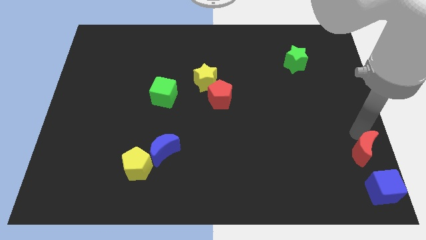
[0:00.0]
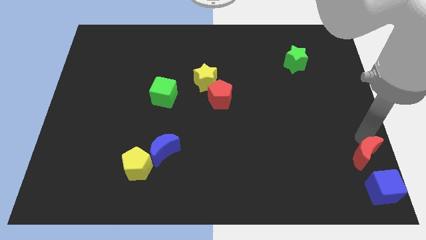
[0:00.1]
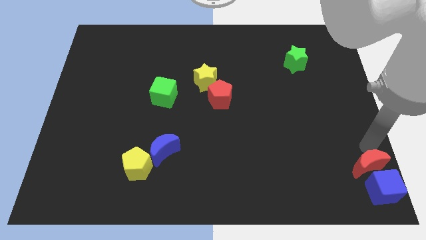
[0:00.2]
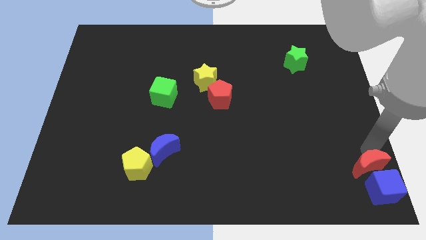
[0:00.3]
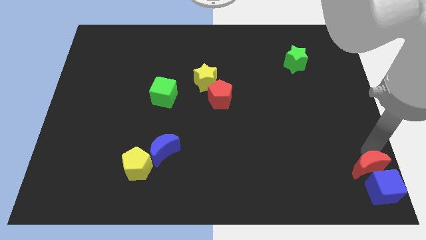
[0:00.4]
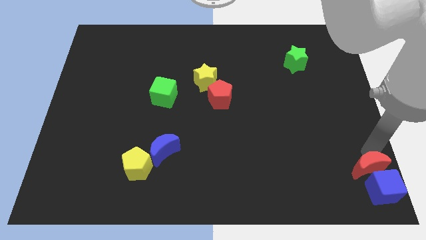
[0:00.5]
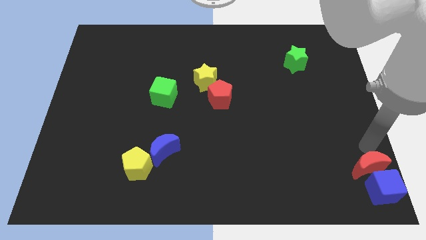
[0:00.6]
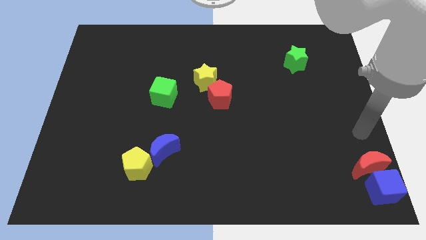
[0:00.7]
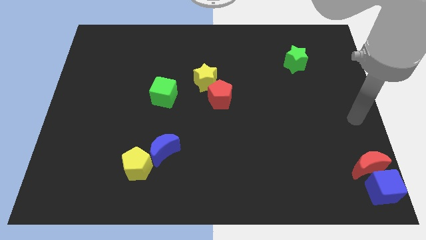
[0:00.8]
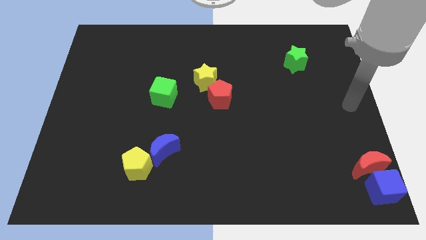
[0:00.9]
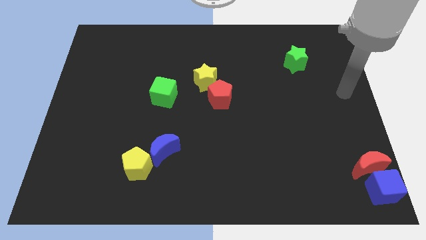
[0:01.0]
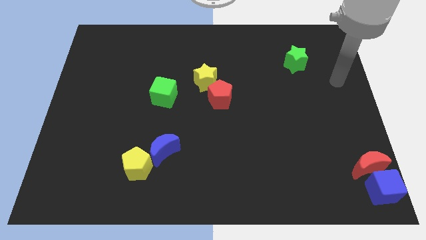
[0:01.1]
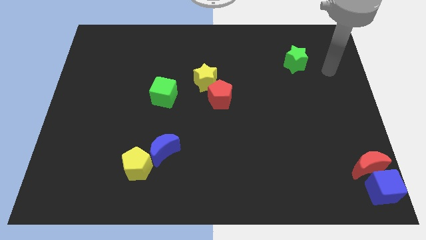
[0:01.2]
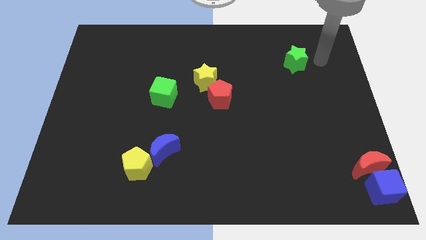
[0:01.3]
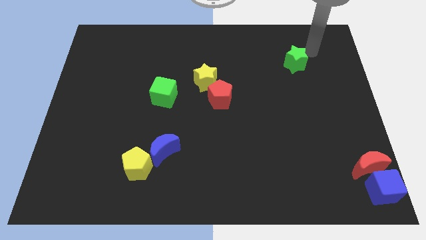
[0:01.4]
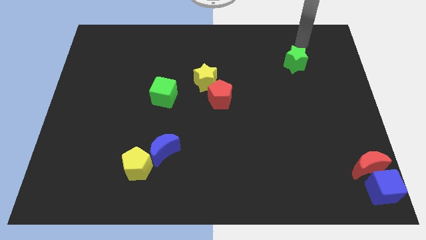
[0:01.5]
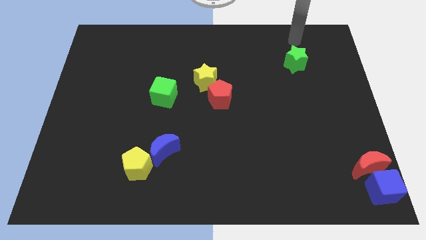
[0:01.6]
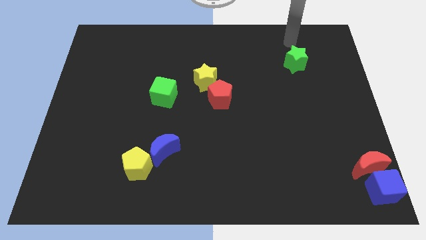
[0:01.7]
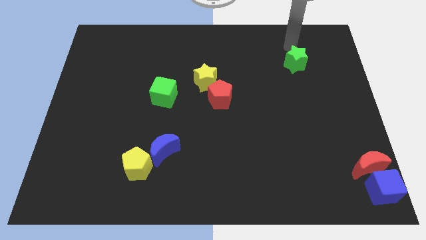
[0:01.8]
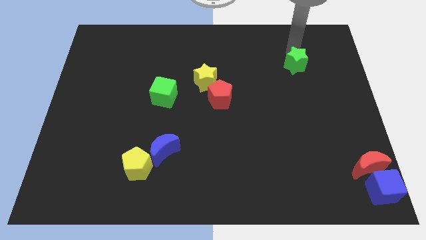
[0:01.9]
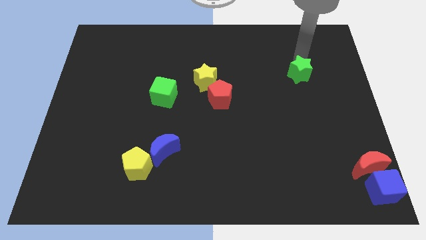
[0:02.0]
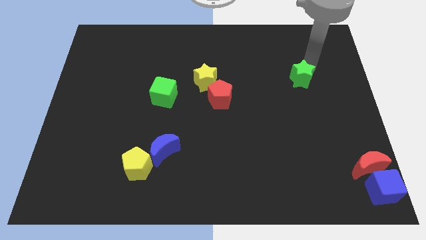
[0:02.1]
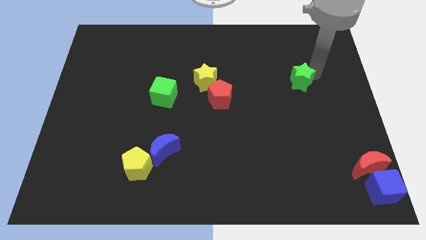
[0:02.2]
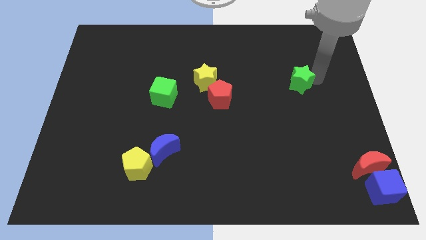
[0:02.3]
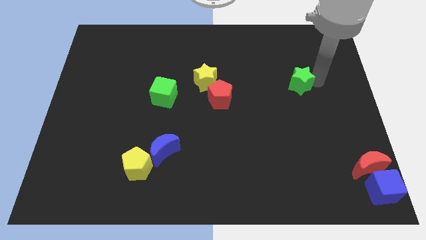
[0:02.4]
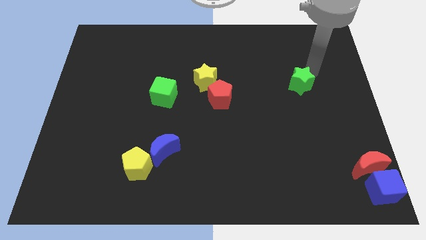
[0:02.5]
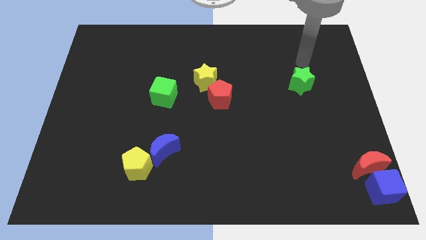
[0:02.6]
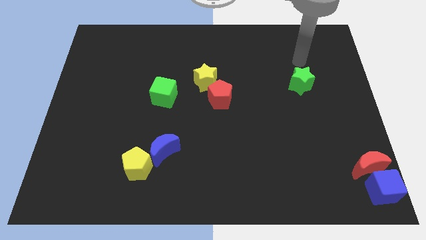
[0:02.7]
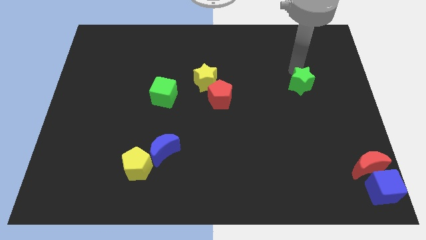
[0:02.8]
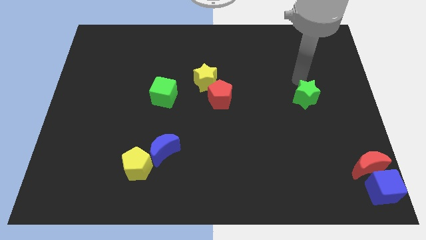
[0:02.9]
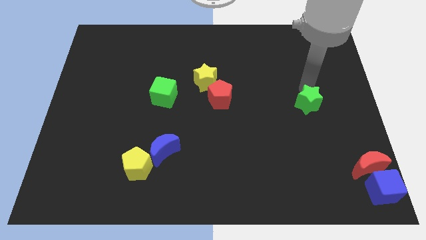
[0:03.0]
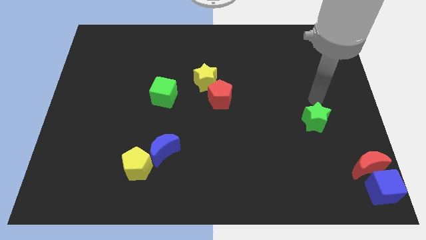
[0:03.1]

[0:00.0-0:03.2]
push the green star downwards

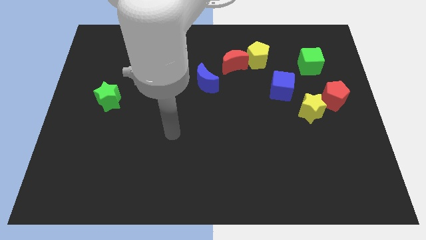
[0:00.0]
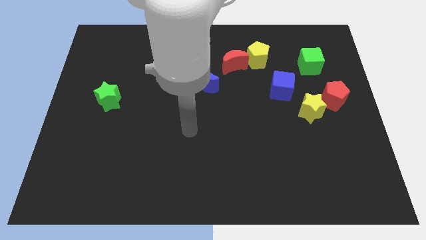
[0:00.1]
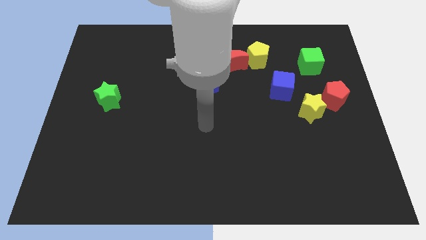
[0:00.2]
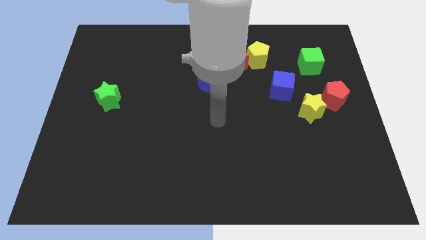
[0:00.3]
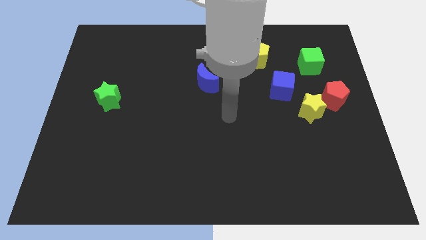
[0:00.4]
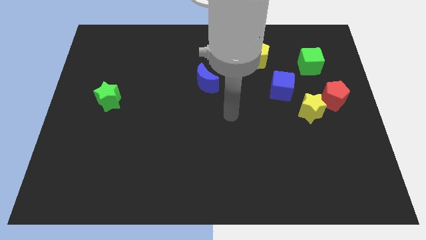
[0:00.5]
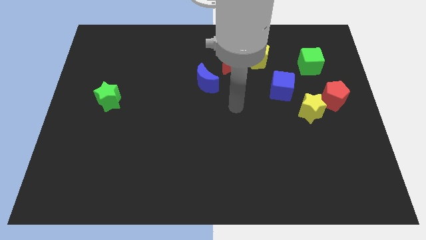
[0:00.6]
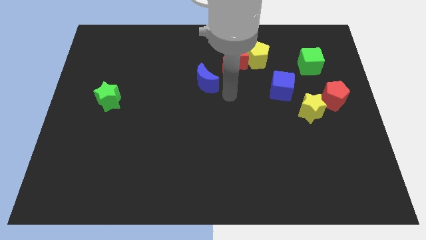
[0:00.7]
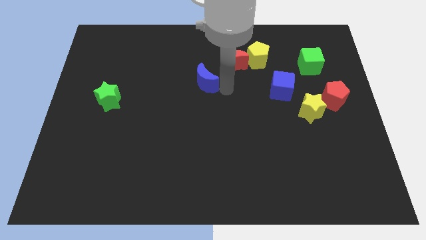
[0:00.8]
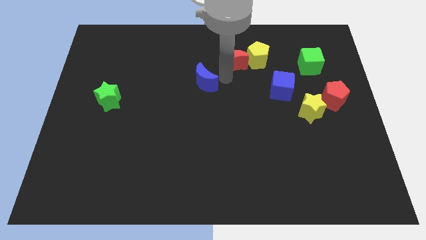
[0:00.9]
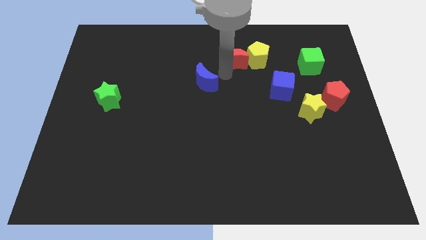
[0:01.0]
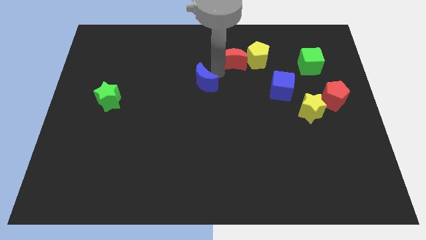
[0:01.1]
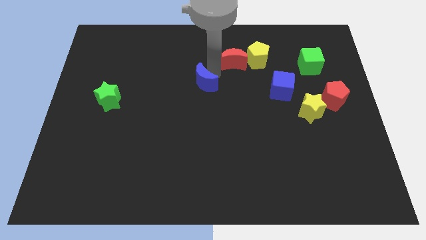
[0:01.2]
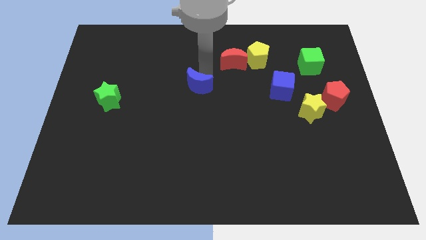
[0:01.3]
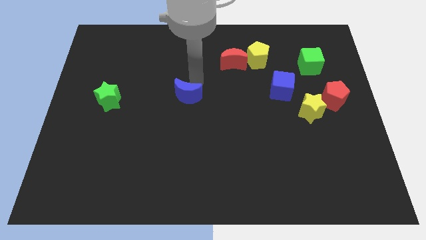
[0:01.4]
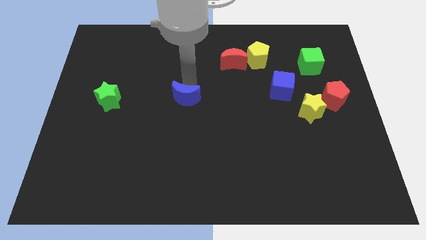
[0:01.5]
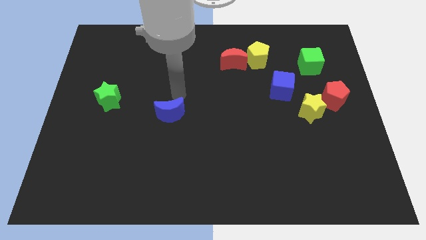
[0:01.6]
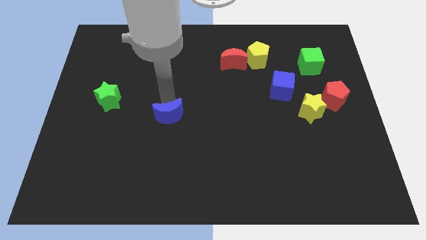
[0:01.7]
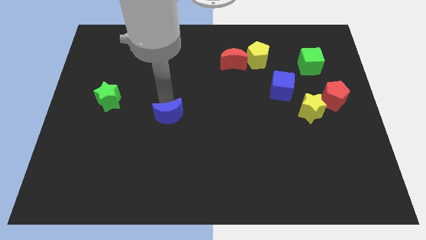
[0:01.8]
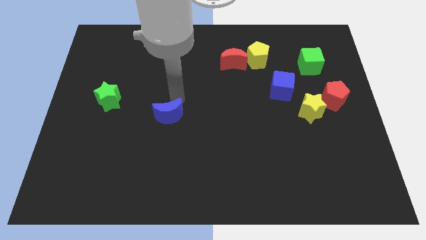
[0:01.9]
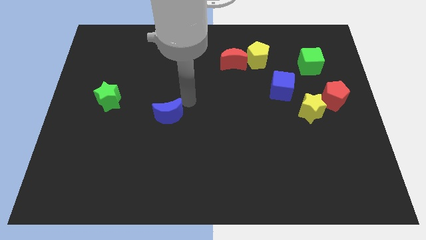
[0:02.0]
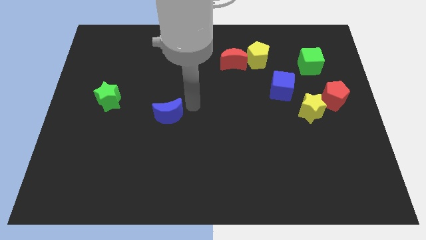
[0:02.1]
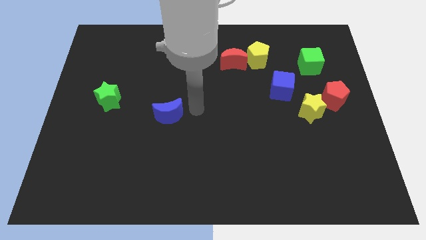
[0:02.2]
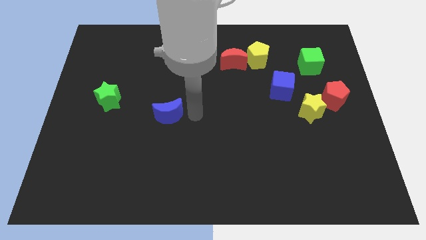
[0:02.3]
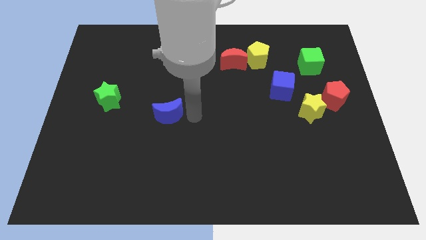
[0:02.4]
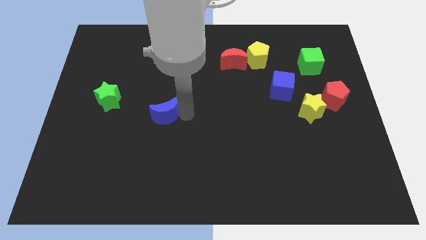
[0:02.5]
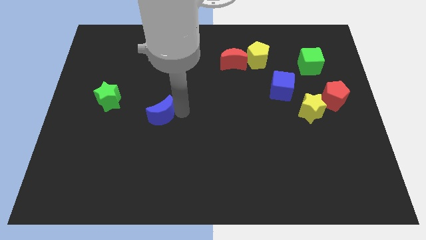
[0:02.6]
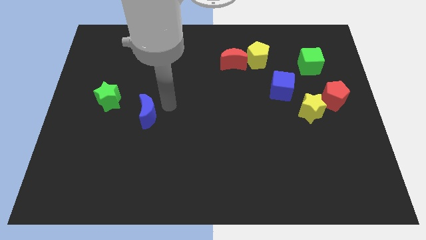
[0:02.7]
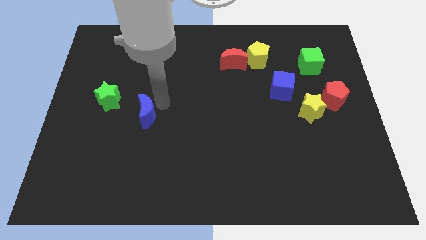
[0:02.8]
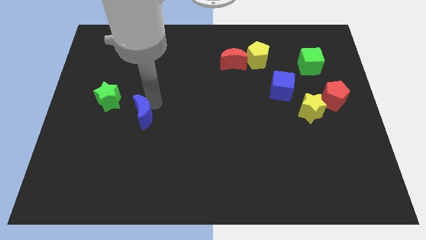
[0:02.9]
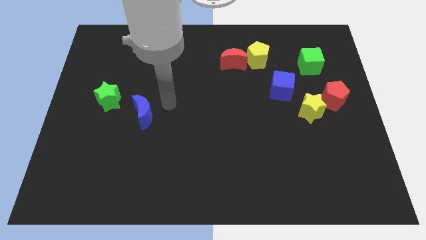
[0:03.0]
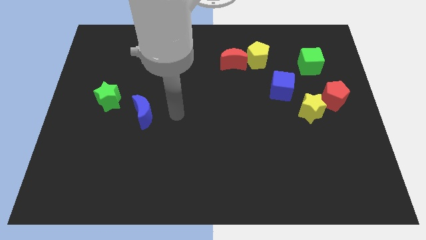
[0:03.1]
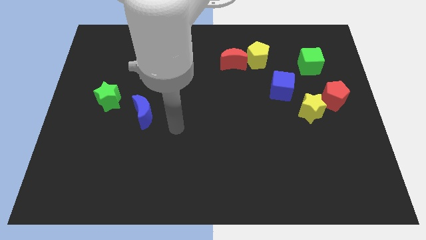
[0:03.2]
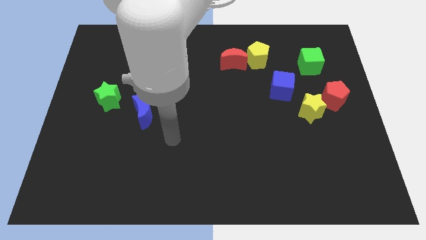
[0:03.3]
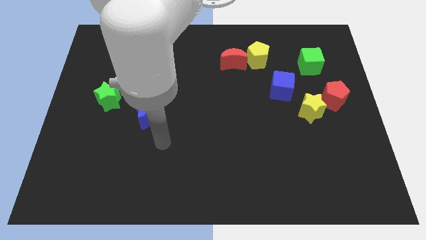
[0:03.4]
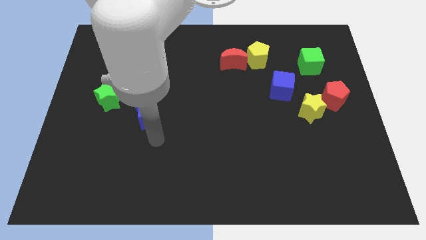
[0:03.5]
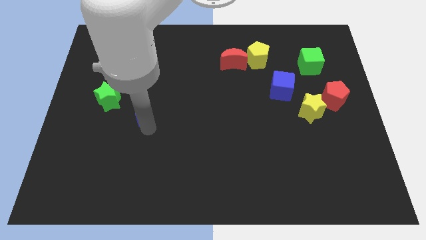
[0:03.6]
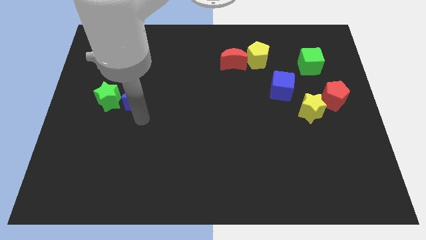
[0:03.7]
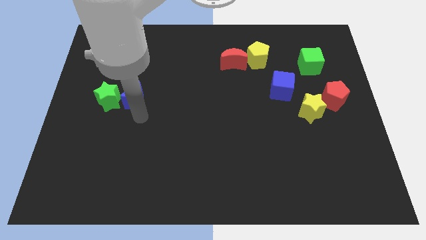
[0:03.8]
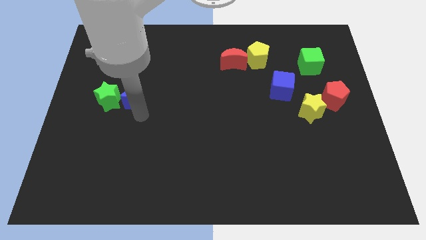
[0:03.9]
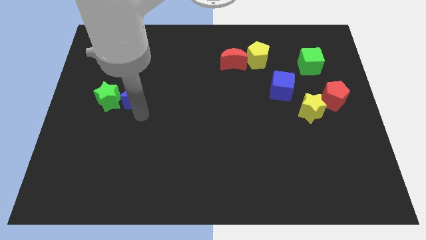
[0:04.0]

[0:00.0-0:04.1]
move the blue crescent to the right of the green star

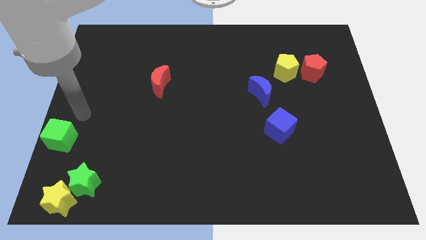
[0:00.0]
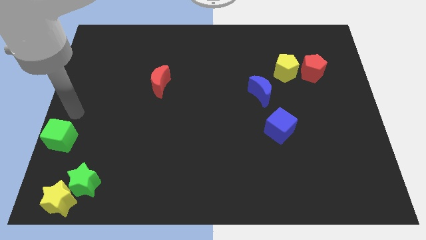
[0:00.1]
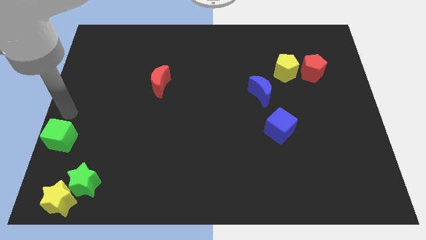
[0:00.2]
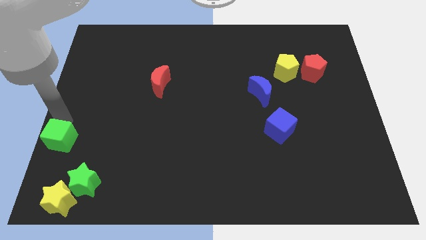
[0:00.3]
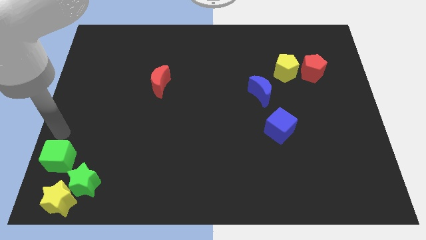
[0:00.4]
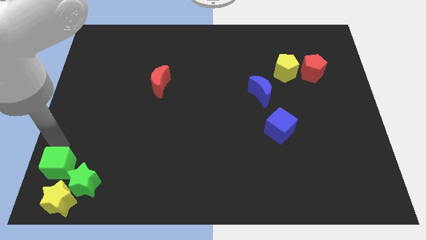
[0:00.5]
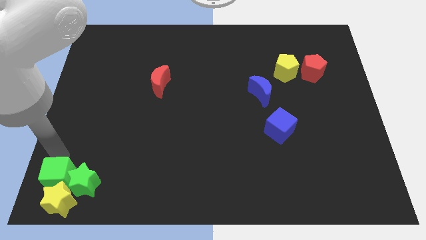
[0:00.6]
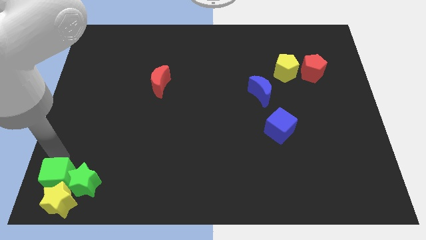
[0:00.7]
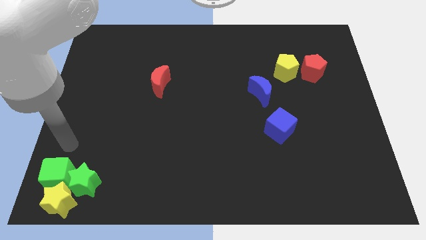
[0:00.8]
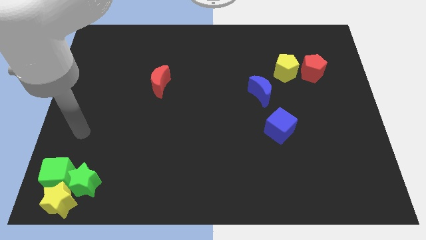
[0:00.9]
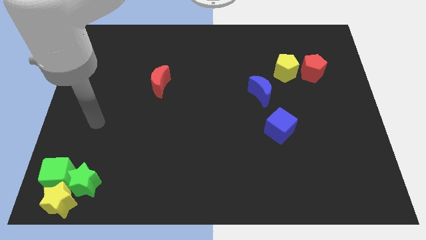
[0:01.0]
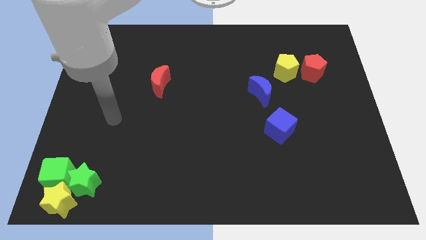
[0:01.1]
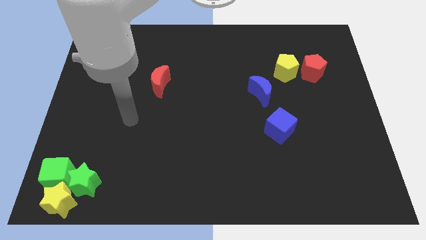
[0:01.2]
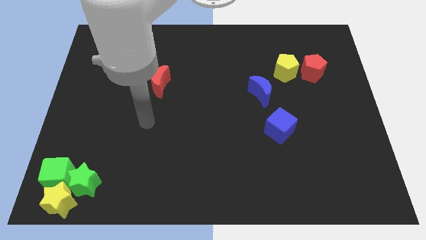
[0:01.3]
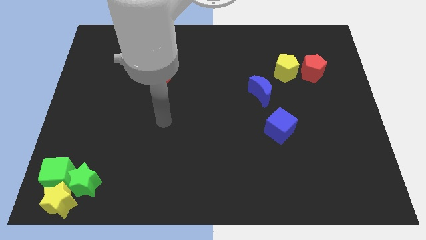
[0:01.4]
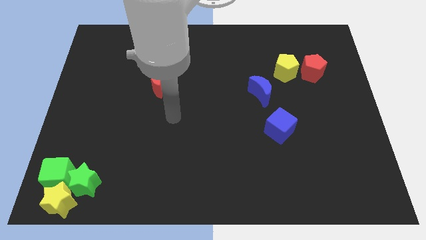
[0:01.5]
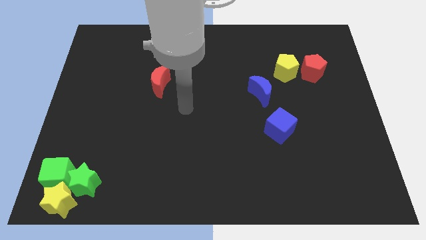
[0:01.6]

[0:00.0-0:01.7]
push the green cube into the yellow star
